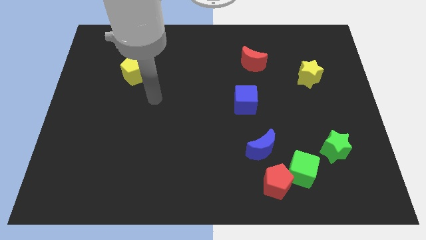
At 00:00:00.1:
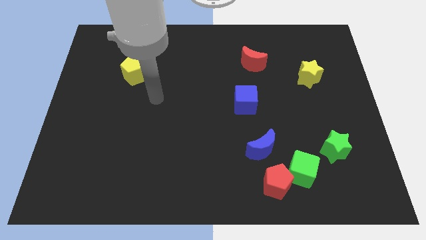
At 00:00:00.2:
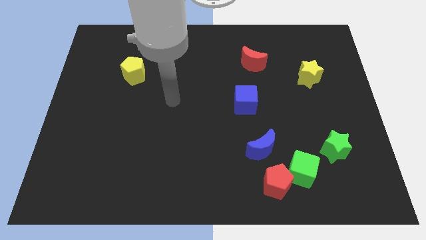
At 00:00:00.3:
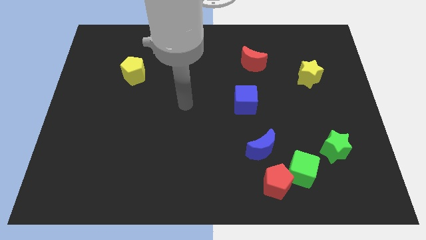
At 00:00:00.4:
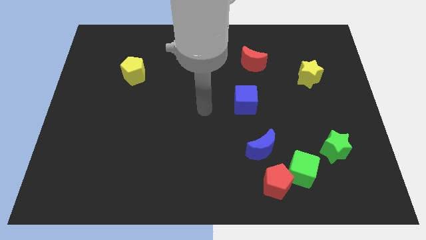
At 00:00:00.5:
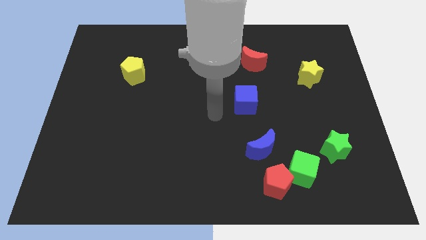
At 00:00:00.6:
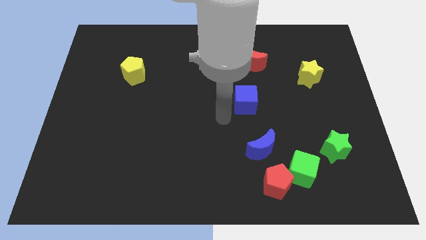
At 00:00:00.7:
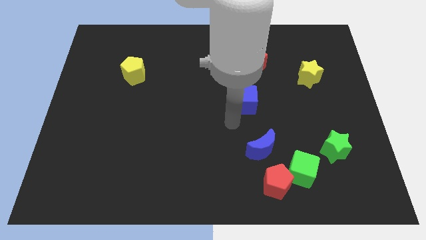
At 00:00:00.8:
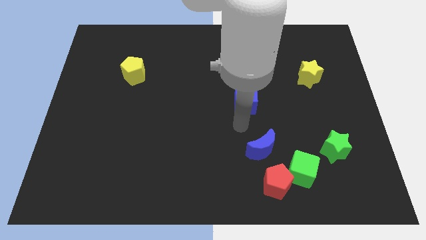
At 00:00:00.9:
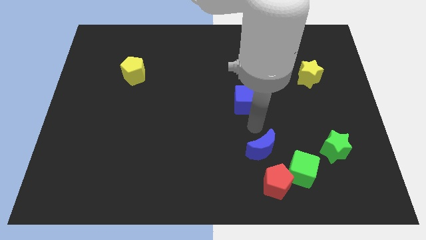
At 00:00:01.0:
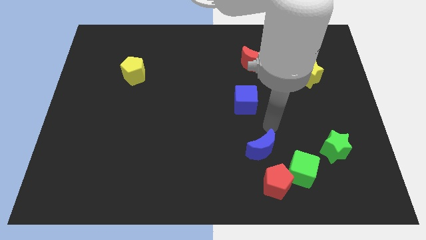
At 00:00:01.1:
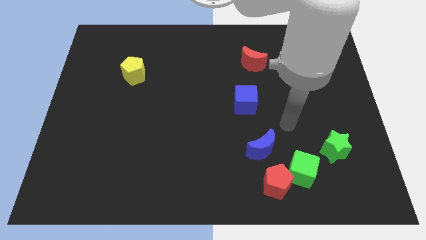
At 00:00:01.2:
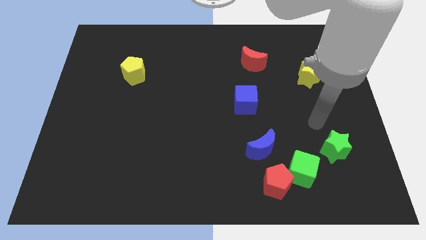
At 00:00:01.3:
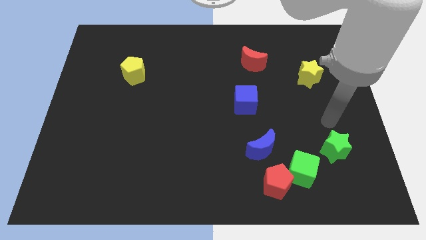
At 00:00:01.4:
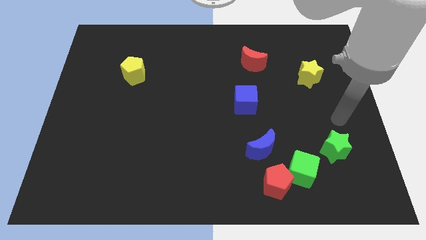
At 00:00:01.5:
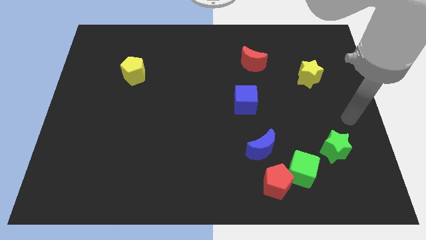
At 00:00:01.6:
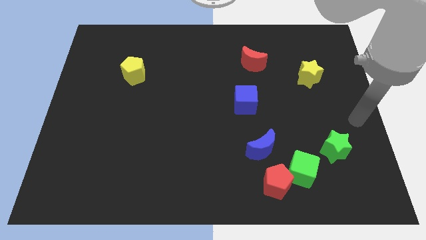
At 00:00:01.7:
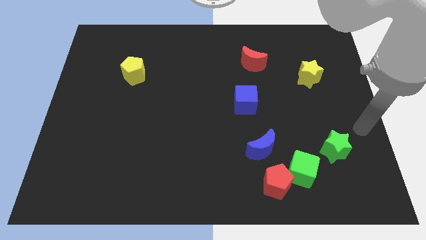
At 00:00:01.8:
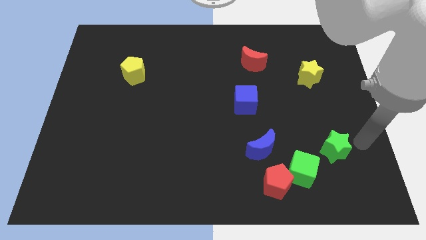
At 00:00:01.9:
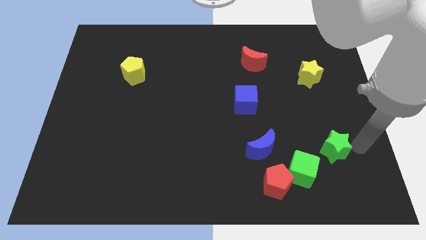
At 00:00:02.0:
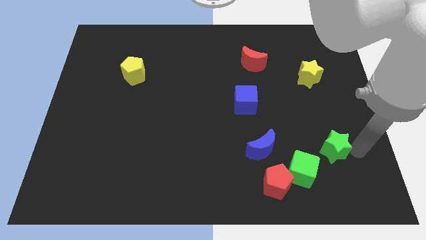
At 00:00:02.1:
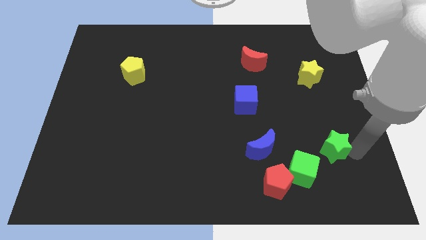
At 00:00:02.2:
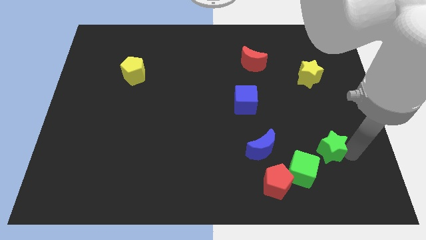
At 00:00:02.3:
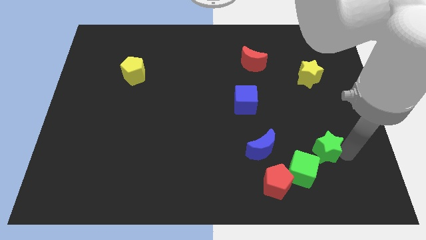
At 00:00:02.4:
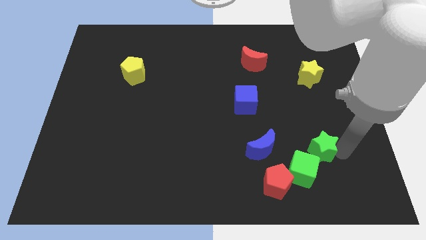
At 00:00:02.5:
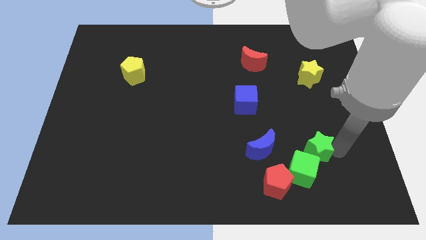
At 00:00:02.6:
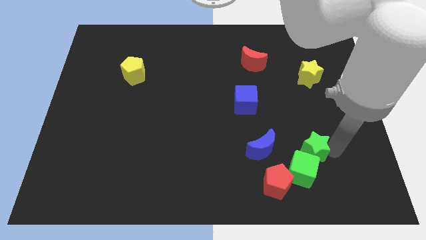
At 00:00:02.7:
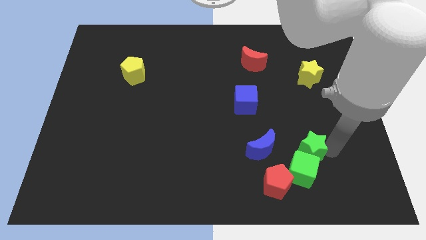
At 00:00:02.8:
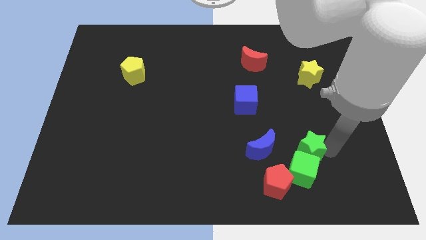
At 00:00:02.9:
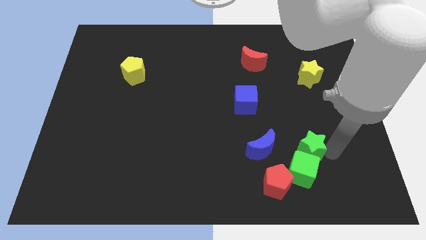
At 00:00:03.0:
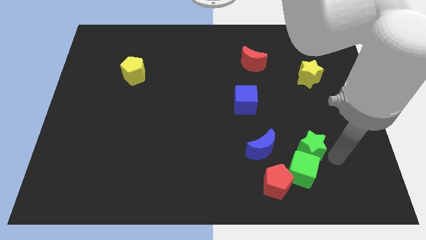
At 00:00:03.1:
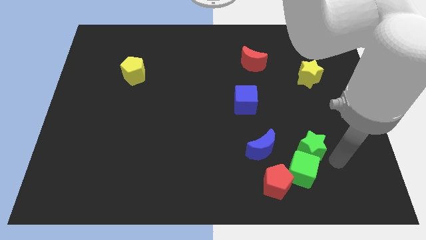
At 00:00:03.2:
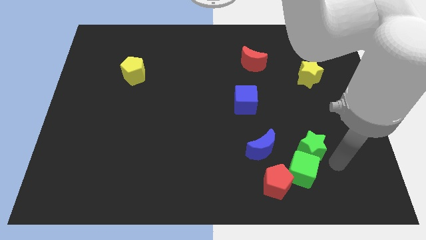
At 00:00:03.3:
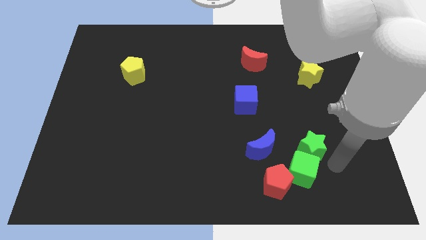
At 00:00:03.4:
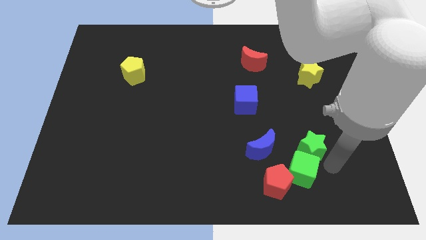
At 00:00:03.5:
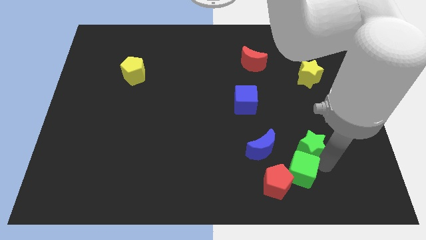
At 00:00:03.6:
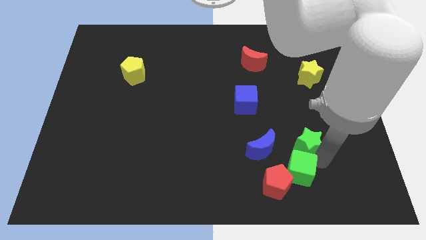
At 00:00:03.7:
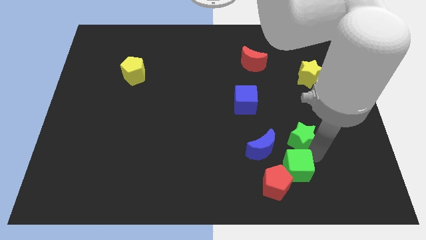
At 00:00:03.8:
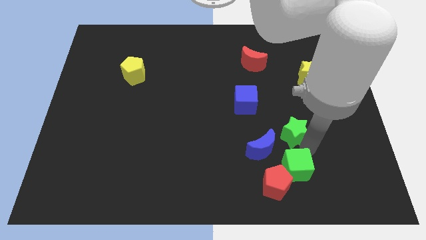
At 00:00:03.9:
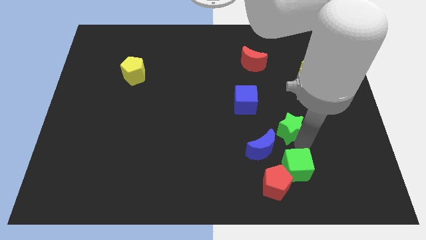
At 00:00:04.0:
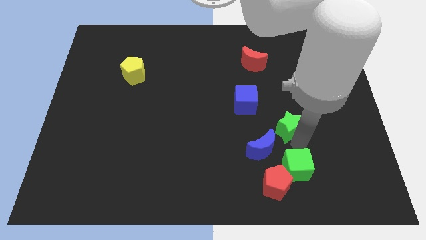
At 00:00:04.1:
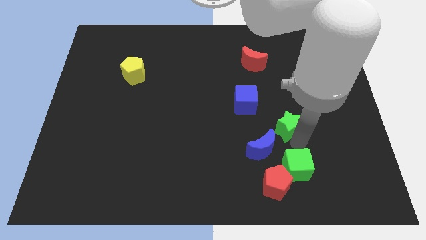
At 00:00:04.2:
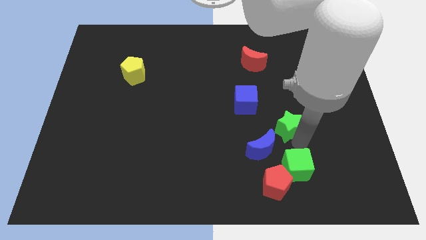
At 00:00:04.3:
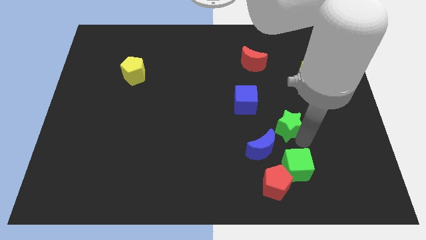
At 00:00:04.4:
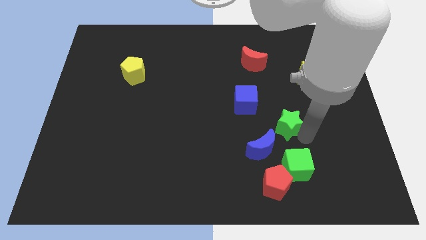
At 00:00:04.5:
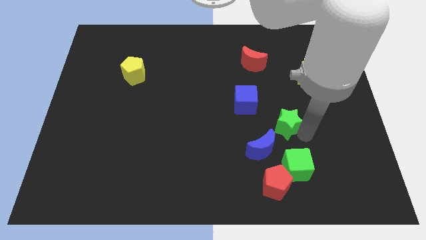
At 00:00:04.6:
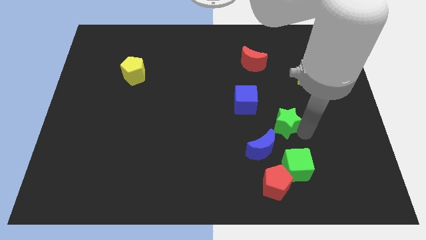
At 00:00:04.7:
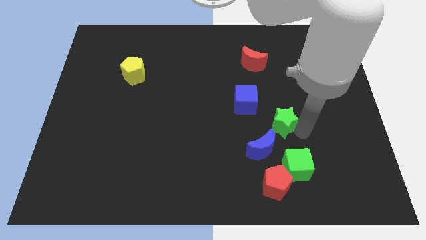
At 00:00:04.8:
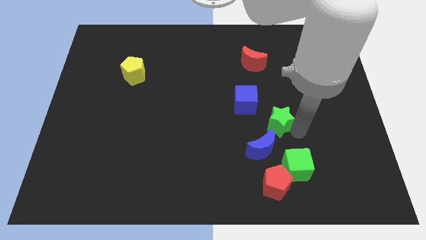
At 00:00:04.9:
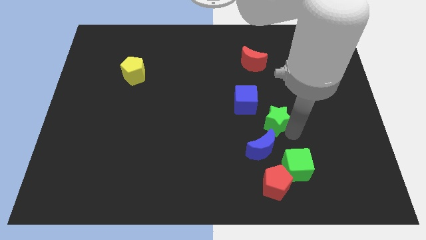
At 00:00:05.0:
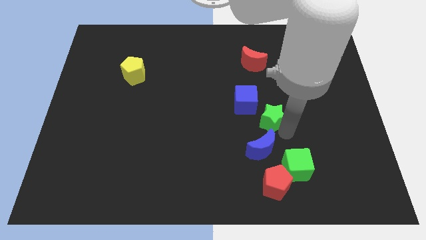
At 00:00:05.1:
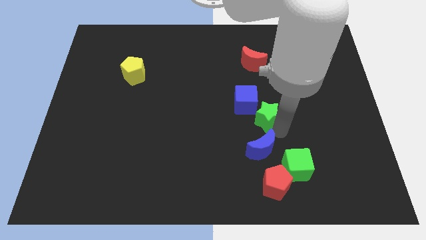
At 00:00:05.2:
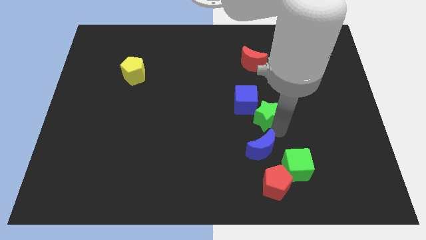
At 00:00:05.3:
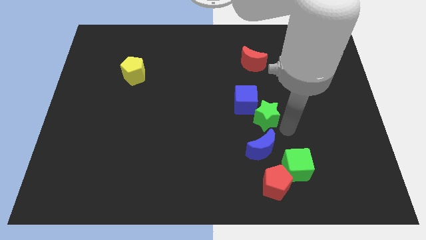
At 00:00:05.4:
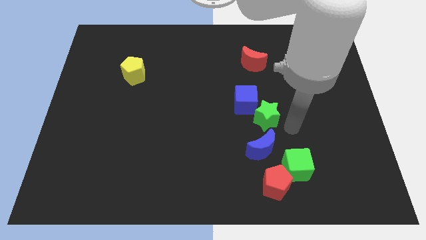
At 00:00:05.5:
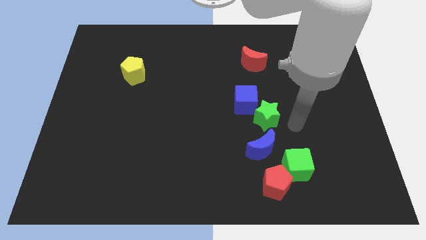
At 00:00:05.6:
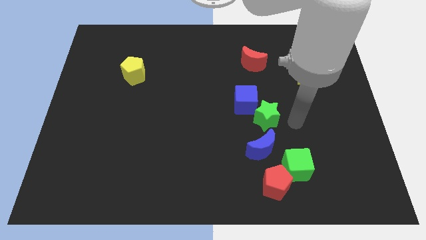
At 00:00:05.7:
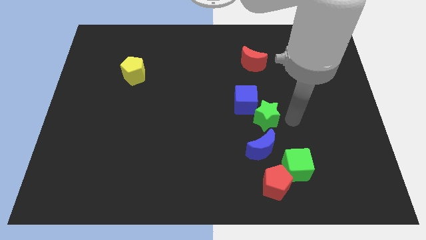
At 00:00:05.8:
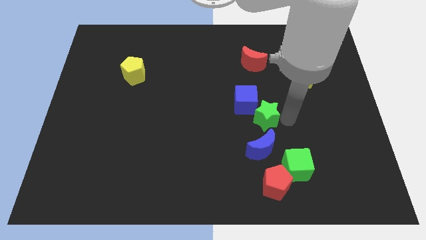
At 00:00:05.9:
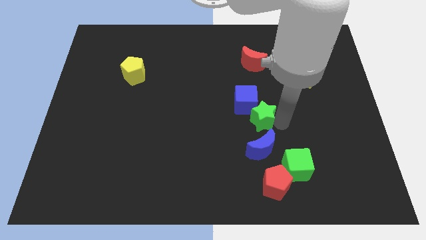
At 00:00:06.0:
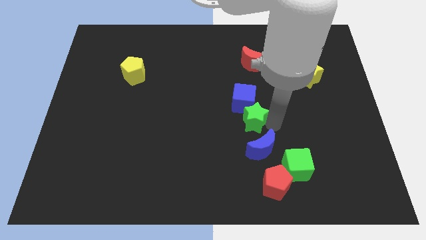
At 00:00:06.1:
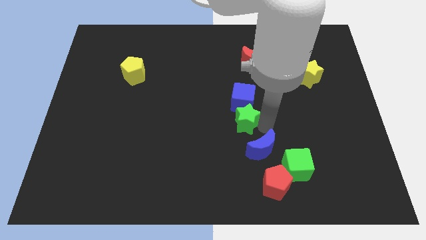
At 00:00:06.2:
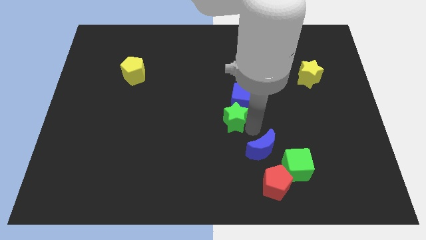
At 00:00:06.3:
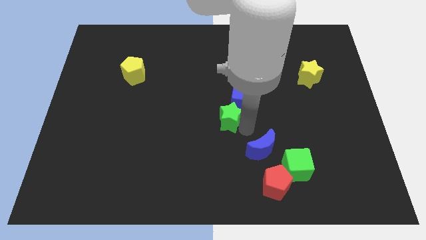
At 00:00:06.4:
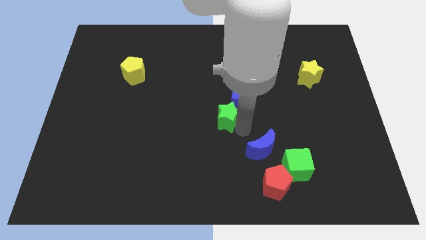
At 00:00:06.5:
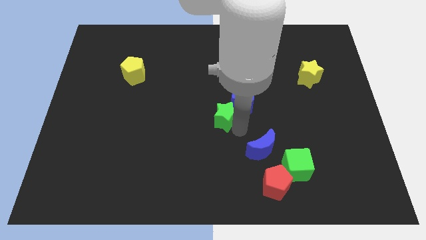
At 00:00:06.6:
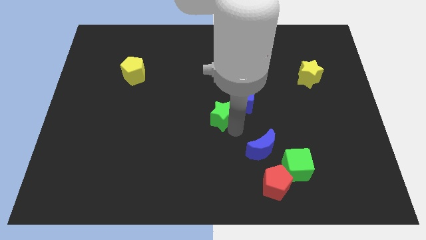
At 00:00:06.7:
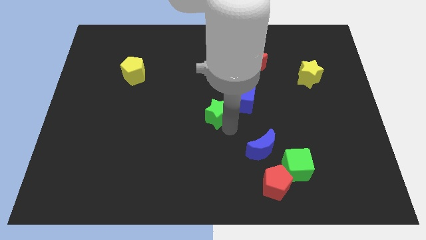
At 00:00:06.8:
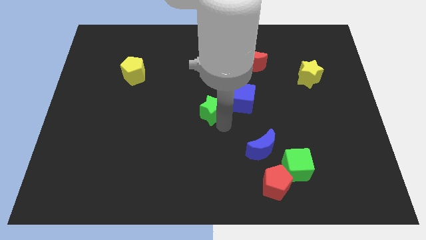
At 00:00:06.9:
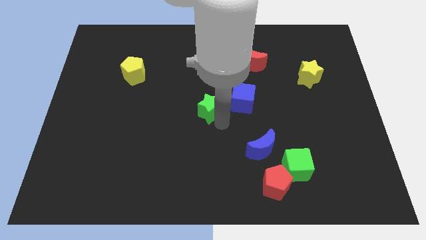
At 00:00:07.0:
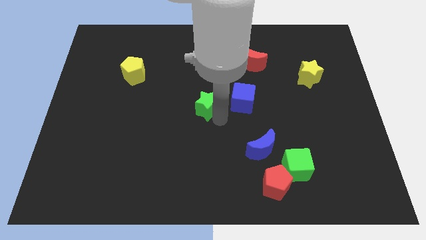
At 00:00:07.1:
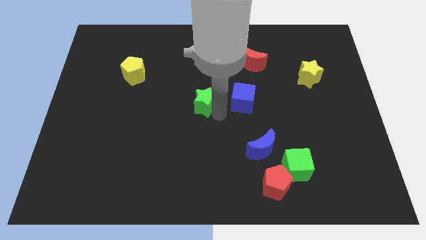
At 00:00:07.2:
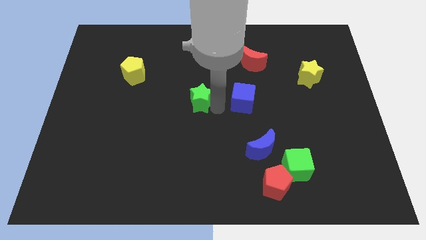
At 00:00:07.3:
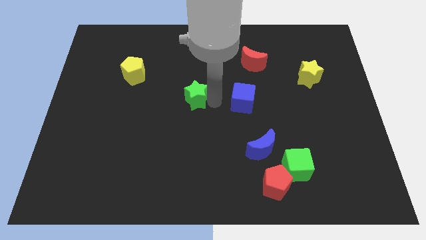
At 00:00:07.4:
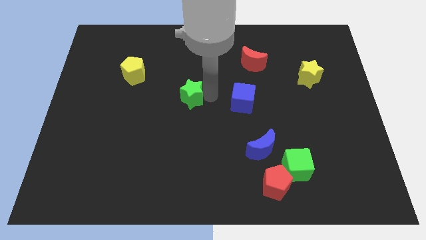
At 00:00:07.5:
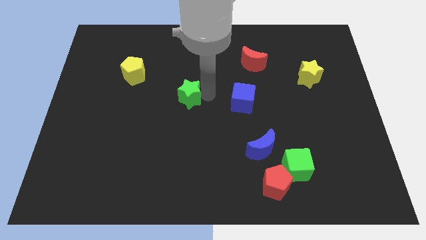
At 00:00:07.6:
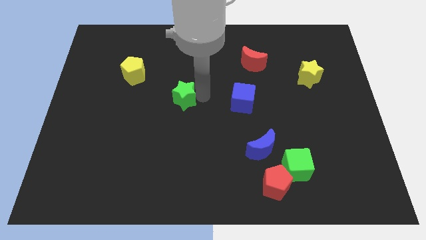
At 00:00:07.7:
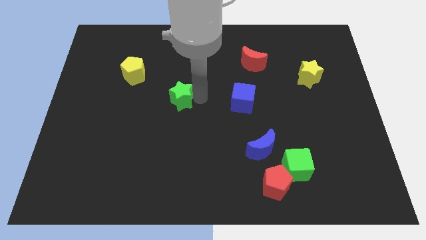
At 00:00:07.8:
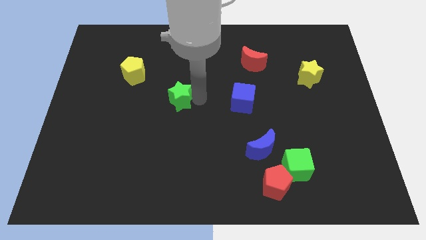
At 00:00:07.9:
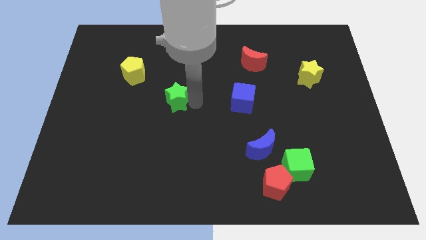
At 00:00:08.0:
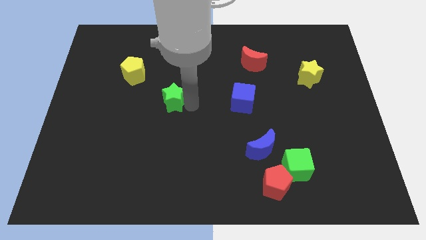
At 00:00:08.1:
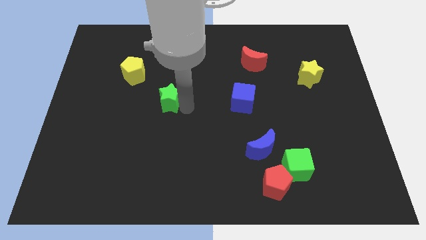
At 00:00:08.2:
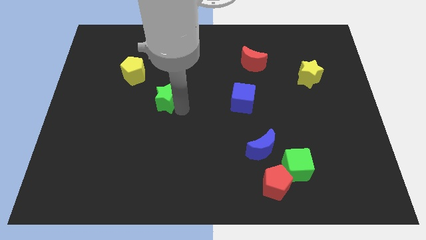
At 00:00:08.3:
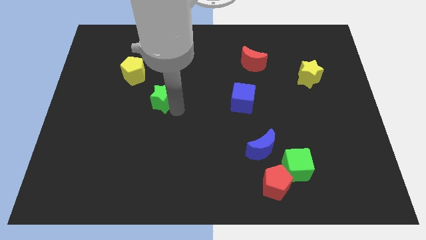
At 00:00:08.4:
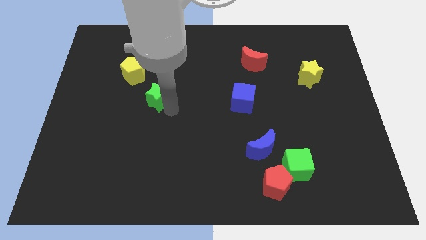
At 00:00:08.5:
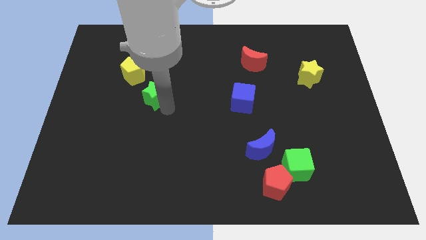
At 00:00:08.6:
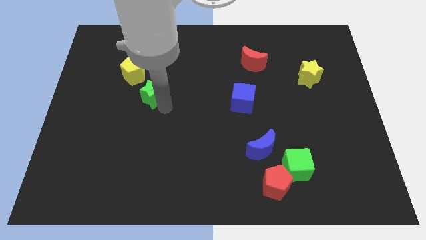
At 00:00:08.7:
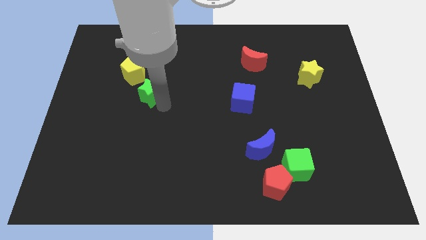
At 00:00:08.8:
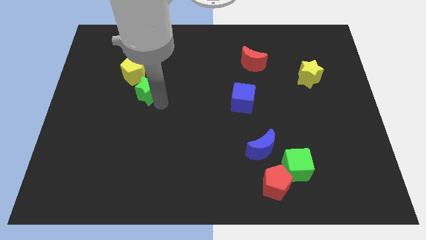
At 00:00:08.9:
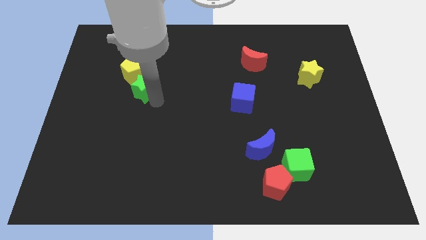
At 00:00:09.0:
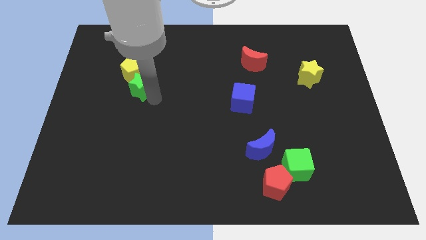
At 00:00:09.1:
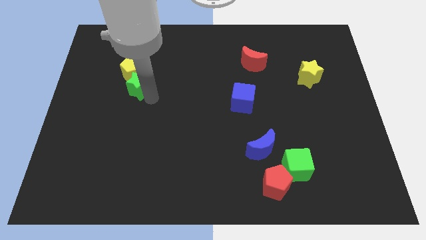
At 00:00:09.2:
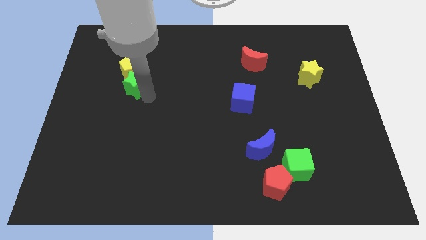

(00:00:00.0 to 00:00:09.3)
move the green star close to the yellow pentagon
